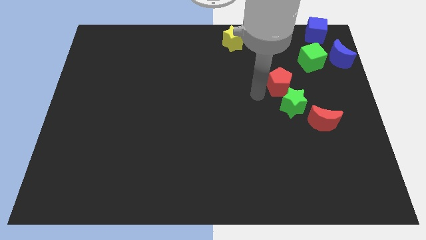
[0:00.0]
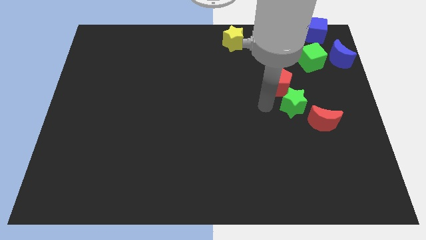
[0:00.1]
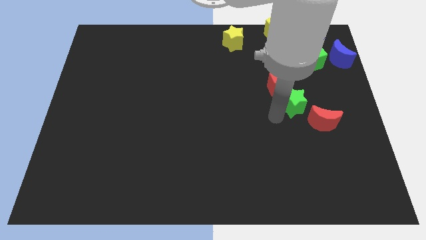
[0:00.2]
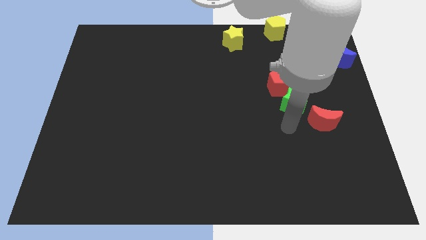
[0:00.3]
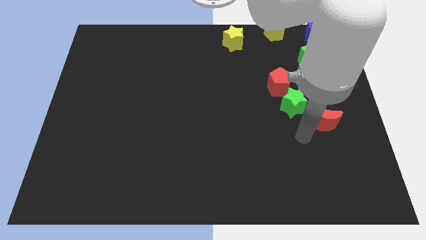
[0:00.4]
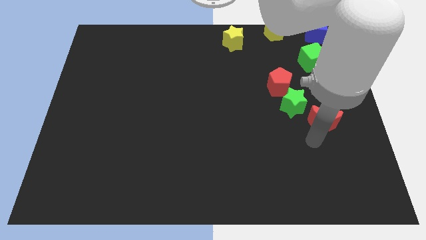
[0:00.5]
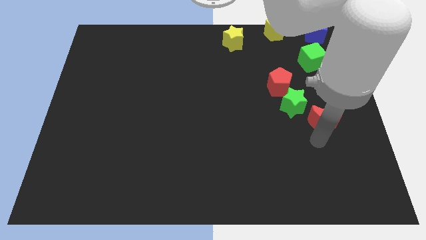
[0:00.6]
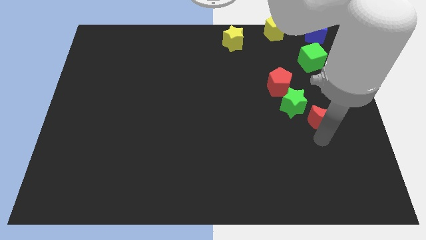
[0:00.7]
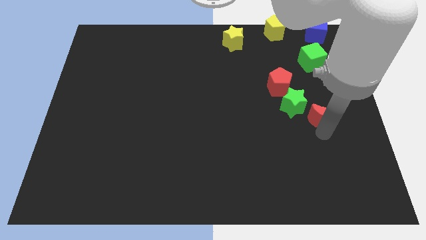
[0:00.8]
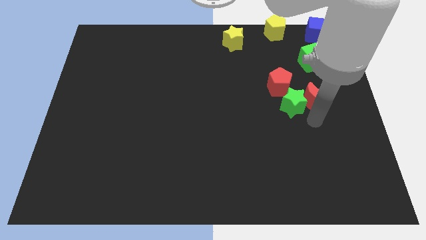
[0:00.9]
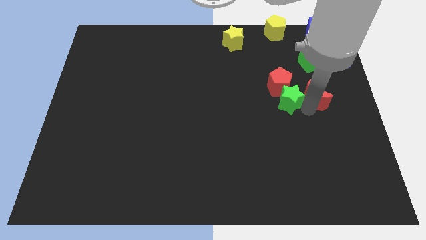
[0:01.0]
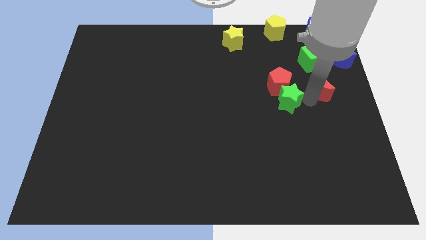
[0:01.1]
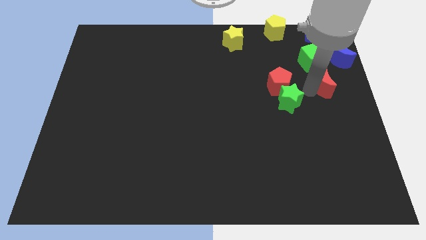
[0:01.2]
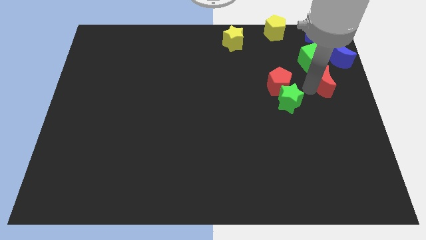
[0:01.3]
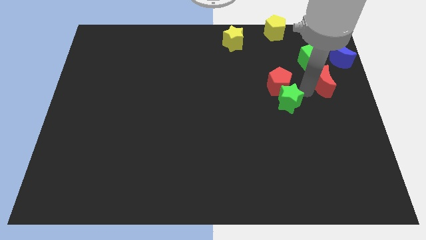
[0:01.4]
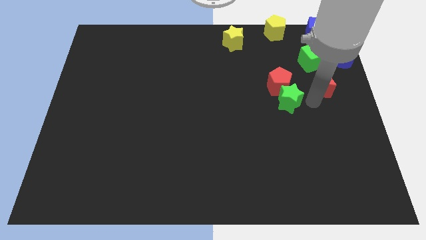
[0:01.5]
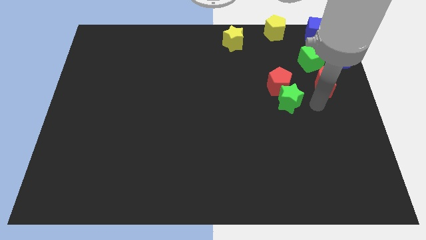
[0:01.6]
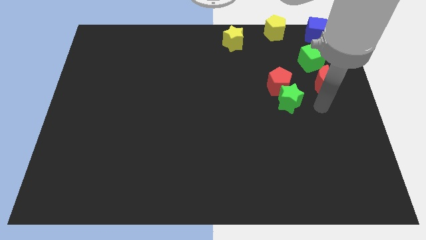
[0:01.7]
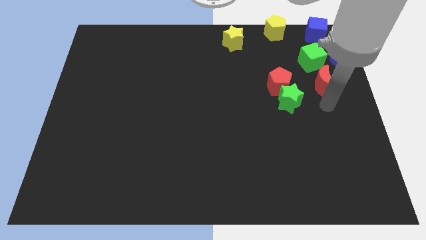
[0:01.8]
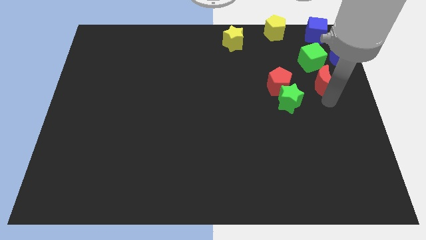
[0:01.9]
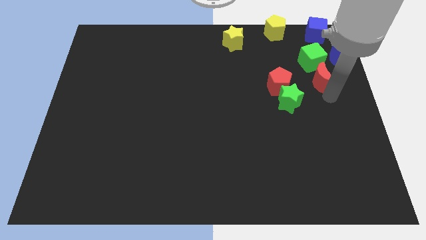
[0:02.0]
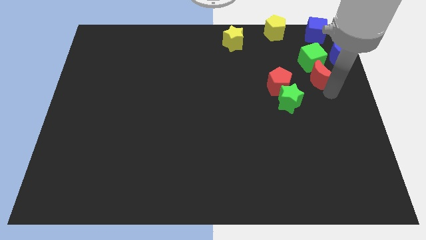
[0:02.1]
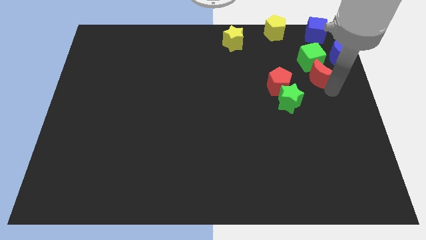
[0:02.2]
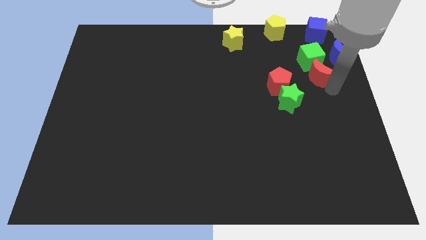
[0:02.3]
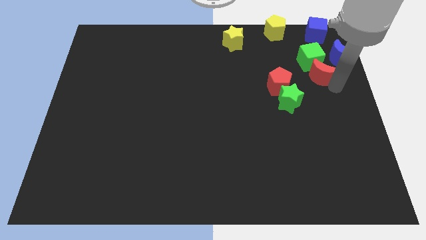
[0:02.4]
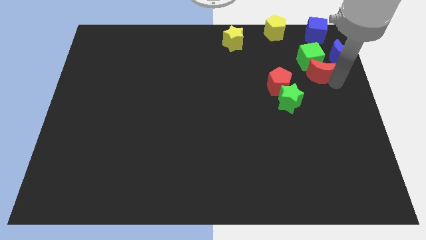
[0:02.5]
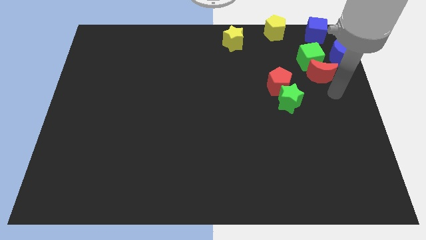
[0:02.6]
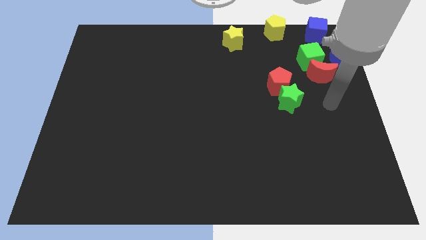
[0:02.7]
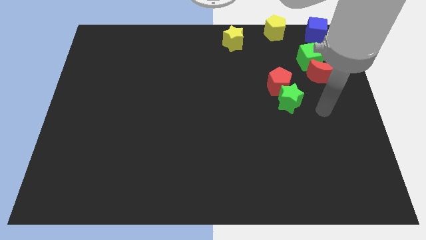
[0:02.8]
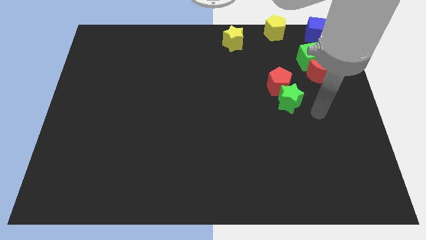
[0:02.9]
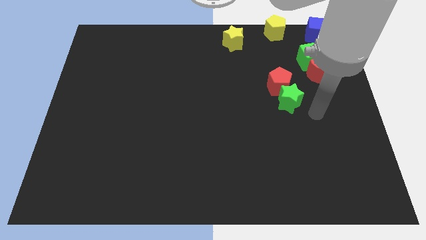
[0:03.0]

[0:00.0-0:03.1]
place the red moon below the green cube

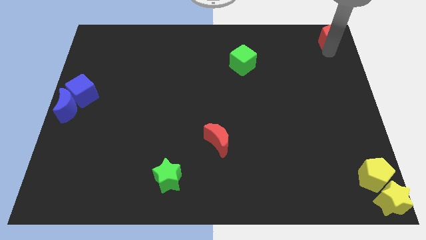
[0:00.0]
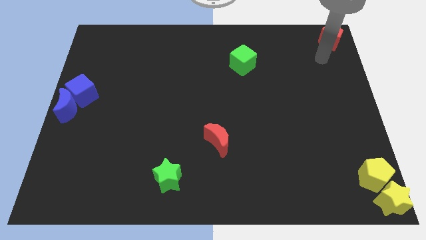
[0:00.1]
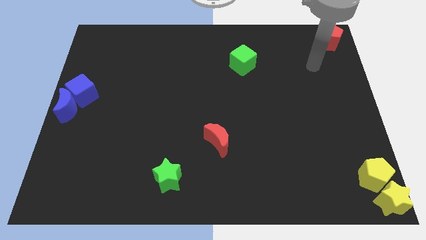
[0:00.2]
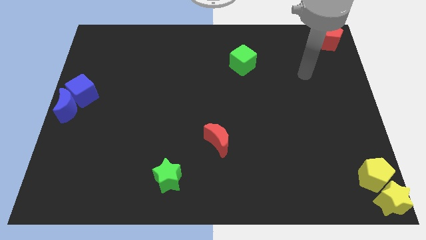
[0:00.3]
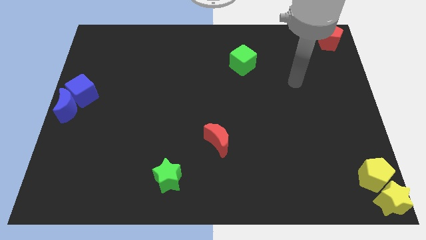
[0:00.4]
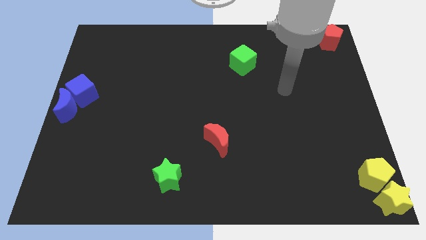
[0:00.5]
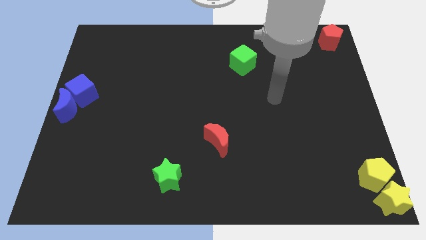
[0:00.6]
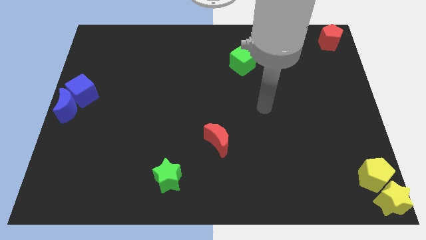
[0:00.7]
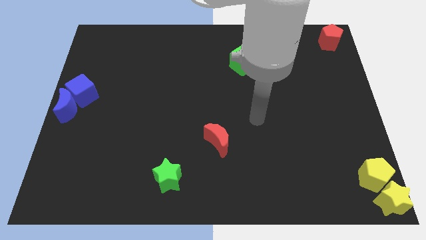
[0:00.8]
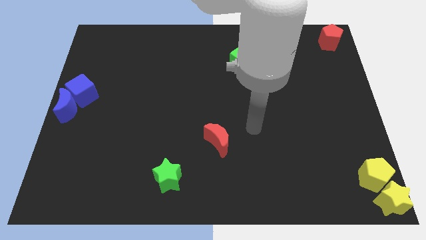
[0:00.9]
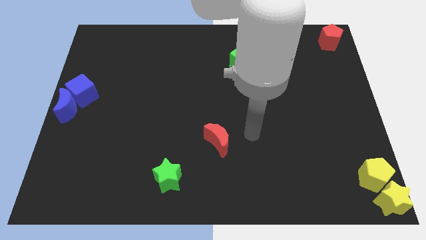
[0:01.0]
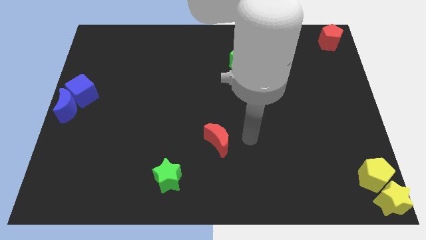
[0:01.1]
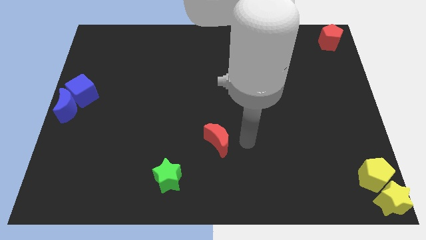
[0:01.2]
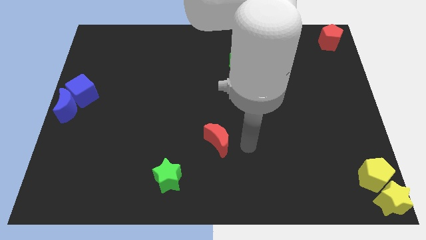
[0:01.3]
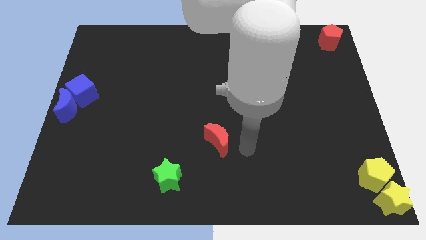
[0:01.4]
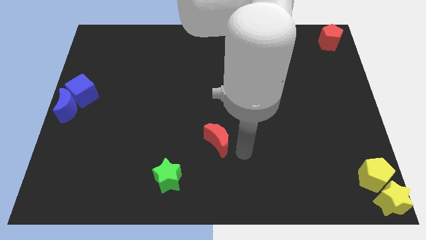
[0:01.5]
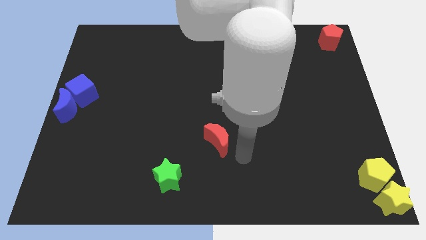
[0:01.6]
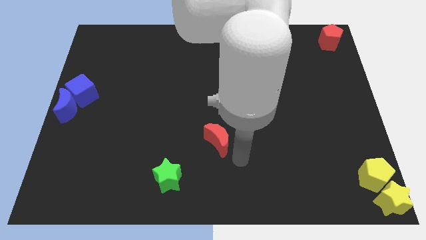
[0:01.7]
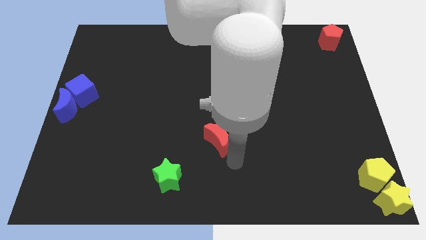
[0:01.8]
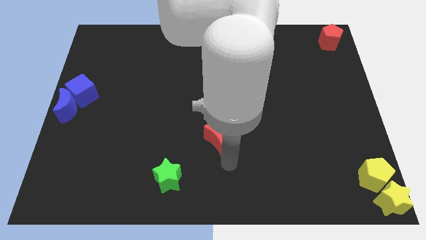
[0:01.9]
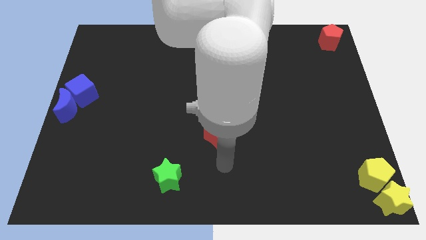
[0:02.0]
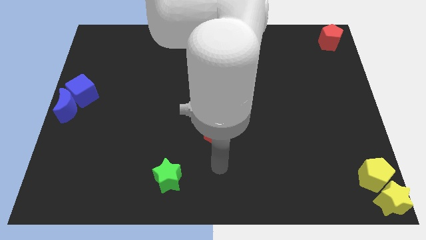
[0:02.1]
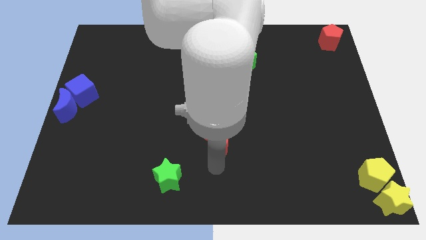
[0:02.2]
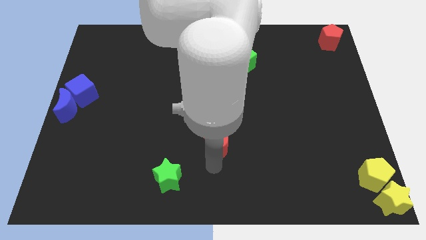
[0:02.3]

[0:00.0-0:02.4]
point your arm at the bottom of red moon

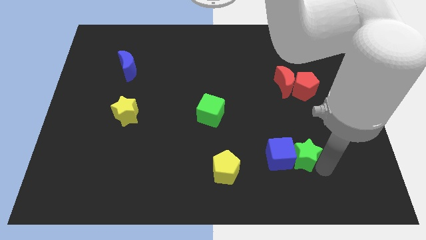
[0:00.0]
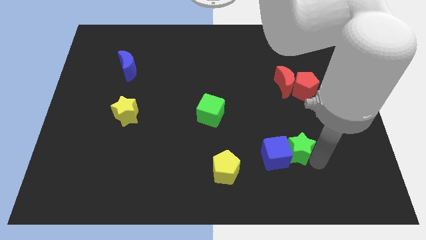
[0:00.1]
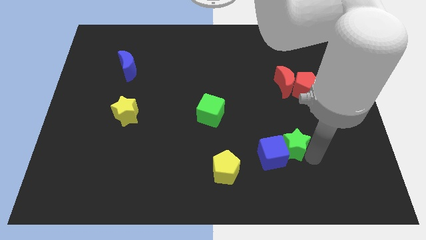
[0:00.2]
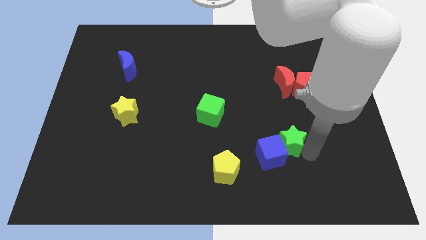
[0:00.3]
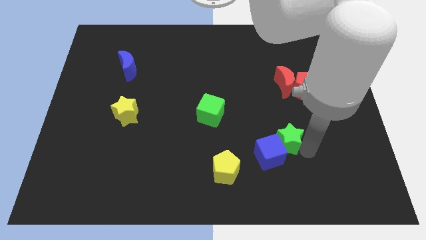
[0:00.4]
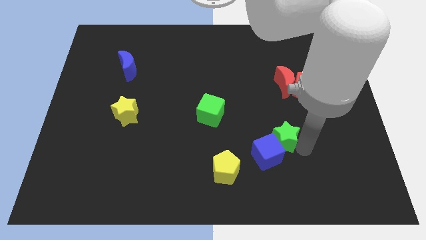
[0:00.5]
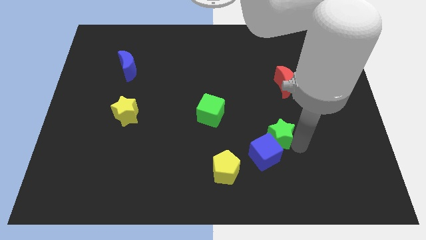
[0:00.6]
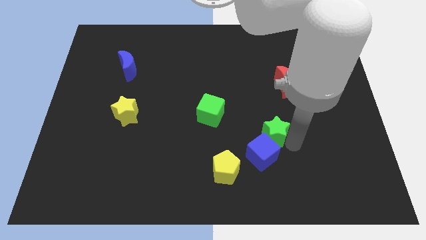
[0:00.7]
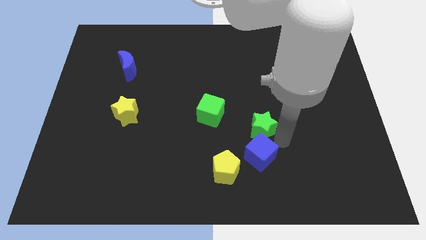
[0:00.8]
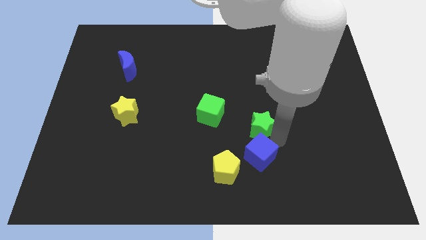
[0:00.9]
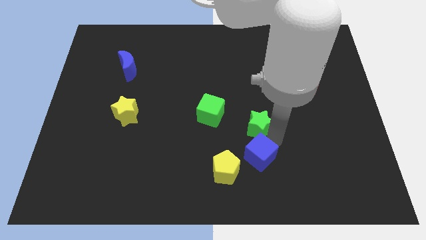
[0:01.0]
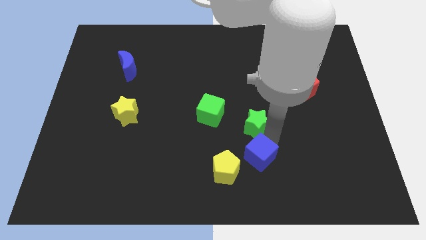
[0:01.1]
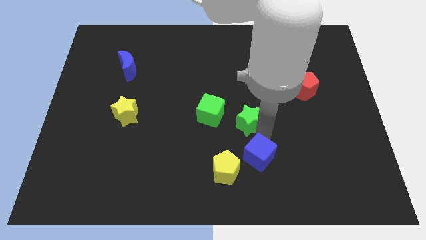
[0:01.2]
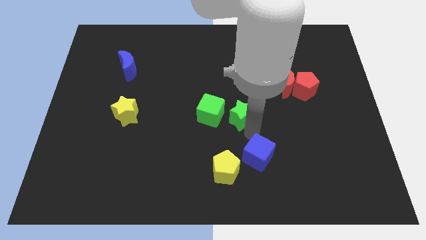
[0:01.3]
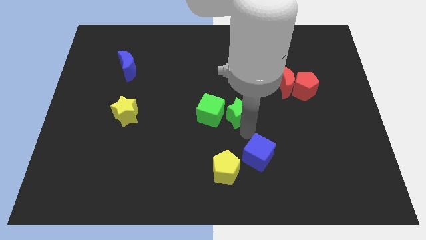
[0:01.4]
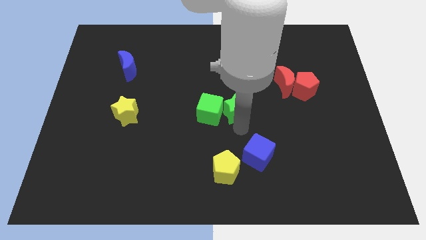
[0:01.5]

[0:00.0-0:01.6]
push the green star into the green cube

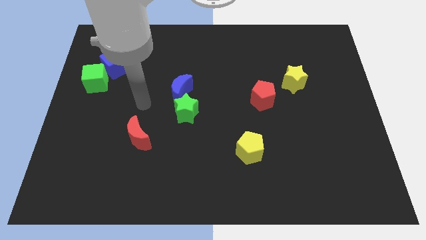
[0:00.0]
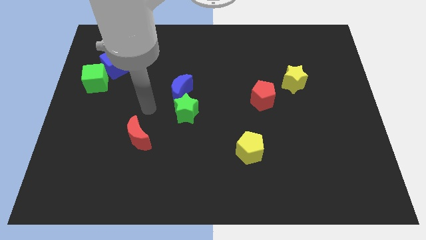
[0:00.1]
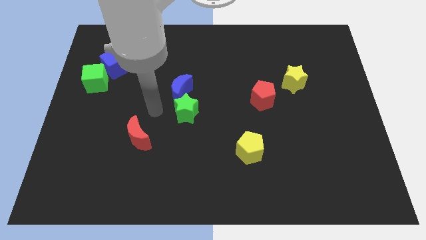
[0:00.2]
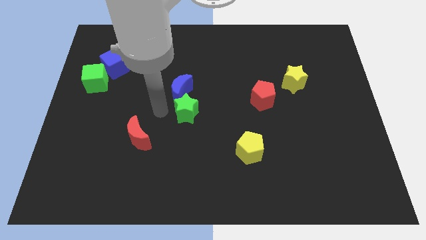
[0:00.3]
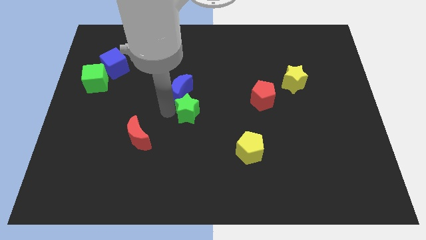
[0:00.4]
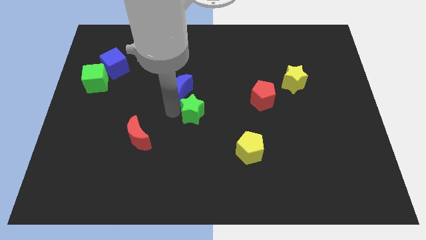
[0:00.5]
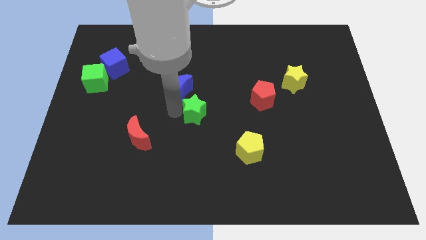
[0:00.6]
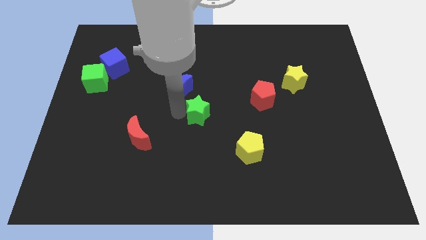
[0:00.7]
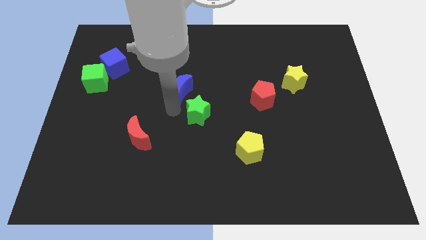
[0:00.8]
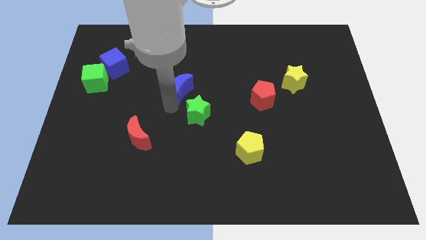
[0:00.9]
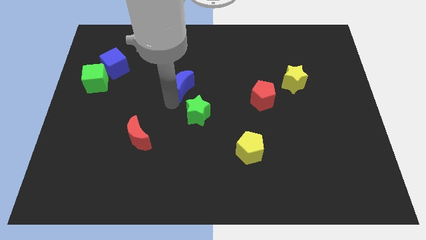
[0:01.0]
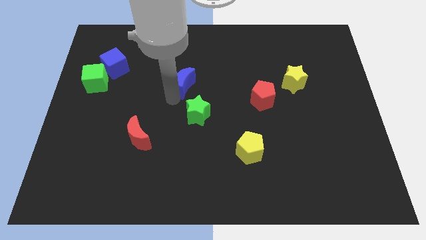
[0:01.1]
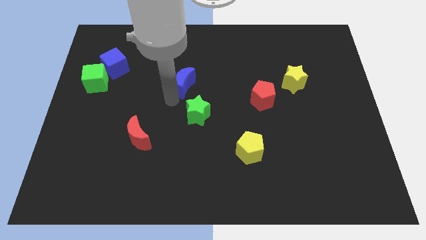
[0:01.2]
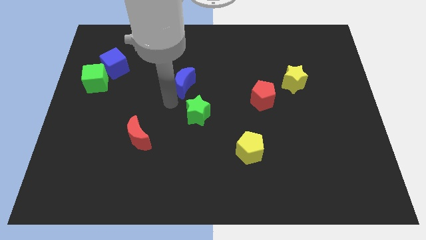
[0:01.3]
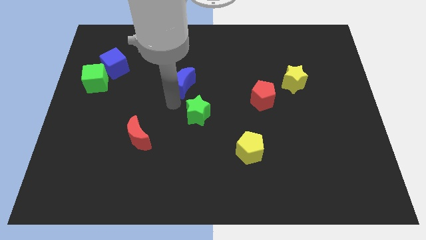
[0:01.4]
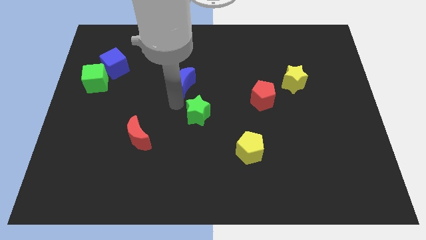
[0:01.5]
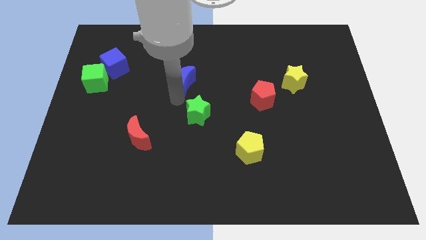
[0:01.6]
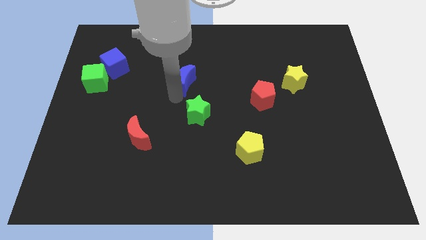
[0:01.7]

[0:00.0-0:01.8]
separate the green star and blue crescent
